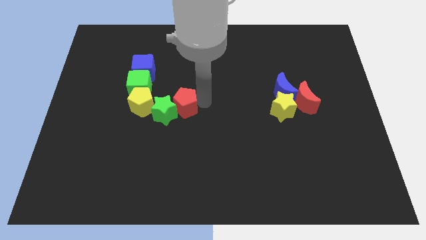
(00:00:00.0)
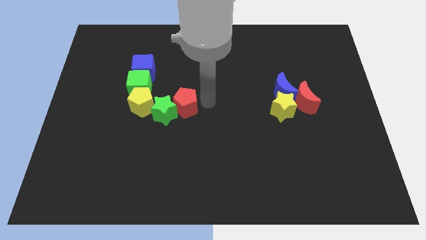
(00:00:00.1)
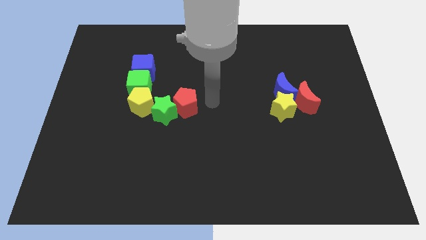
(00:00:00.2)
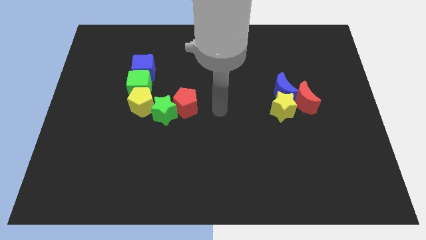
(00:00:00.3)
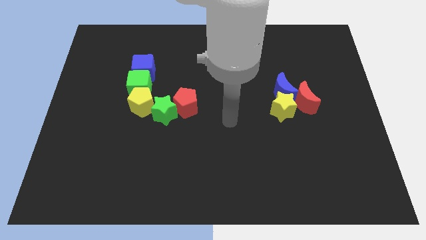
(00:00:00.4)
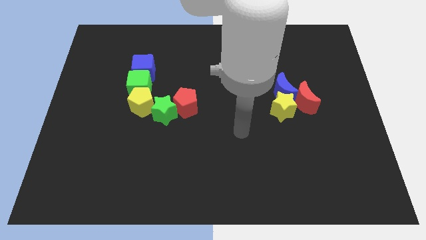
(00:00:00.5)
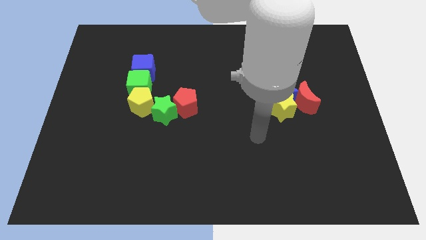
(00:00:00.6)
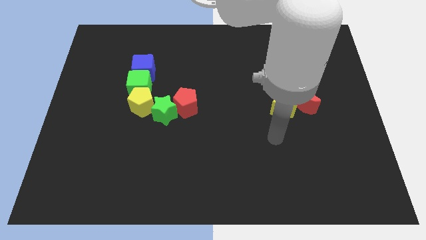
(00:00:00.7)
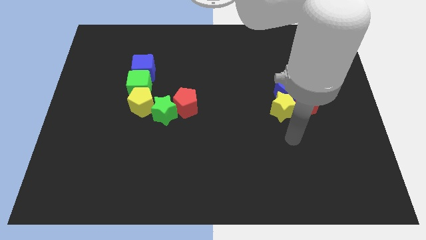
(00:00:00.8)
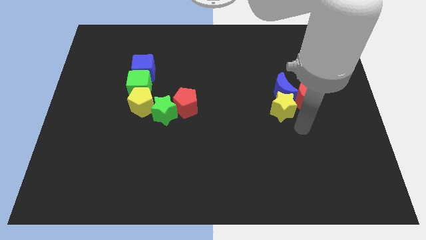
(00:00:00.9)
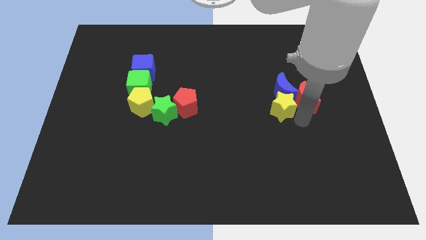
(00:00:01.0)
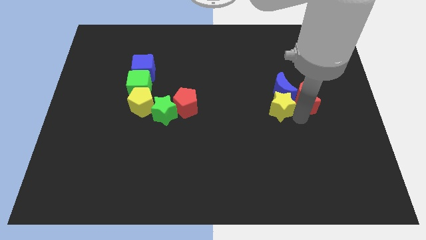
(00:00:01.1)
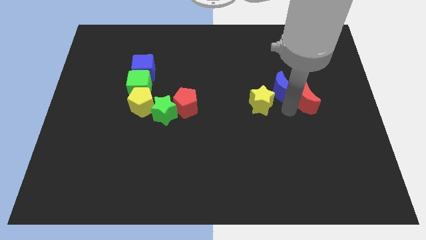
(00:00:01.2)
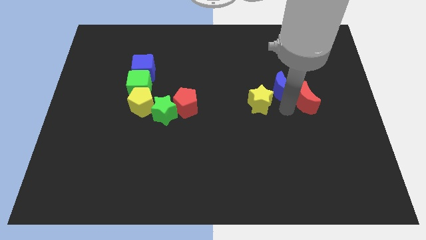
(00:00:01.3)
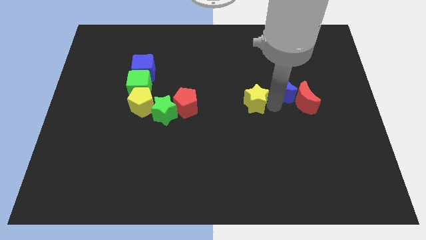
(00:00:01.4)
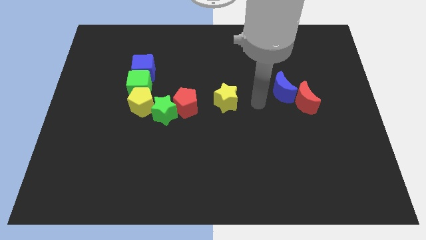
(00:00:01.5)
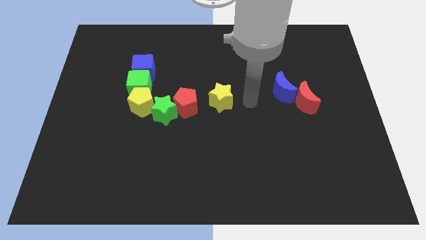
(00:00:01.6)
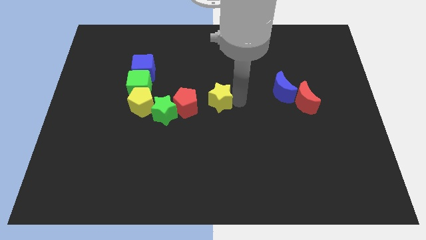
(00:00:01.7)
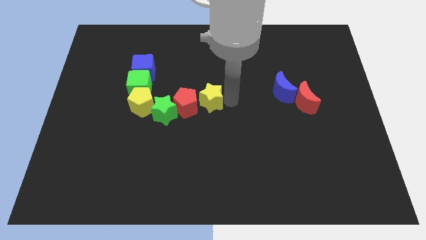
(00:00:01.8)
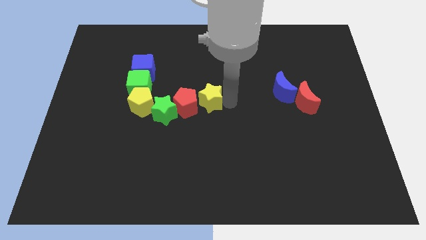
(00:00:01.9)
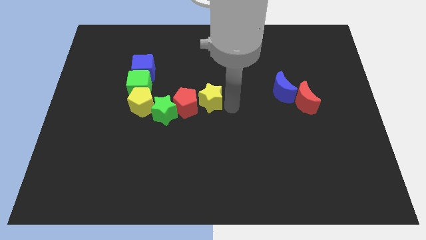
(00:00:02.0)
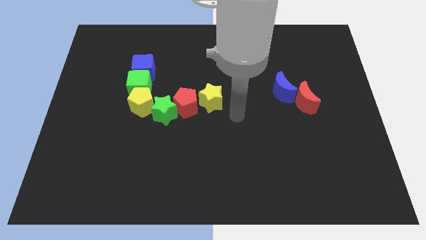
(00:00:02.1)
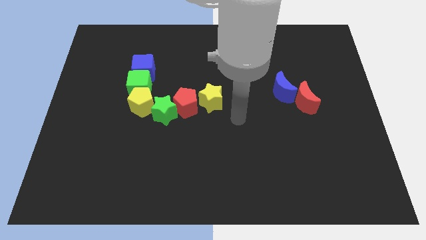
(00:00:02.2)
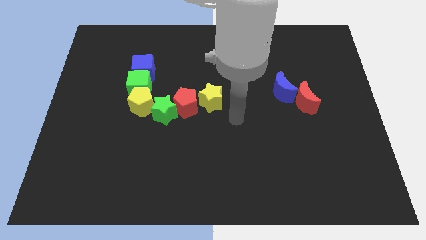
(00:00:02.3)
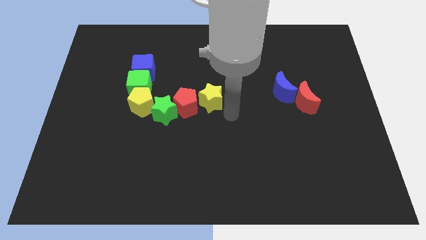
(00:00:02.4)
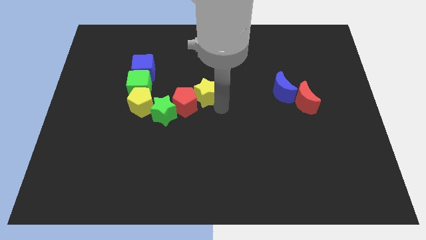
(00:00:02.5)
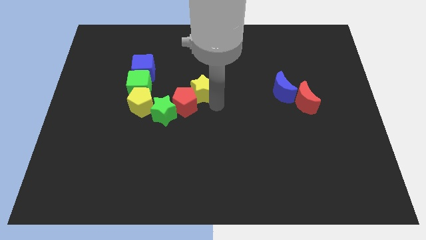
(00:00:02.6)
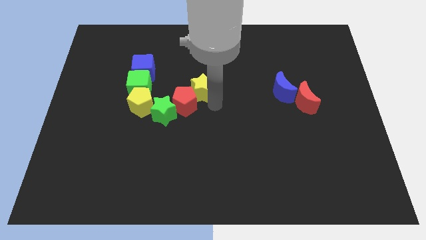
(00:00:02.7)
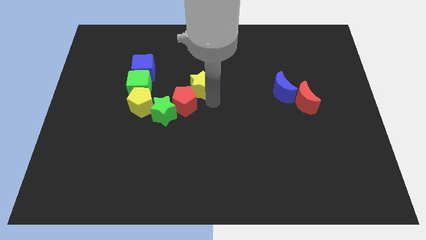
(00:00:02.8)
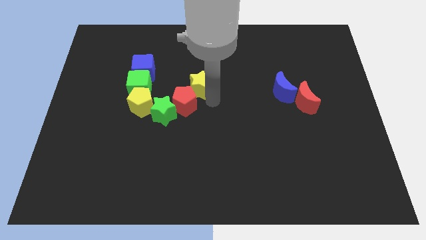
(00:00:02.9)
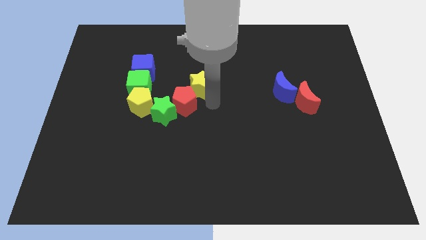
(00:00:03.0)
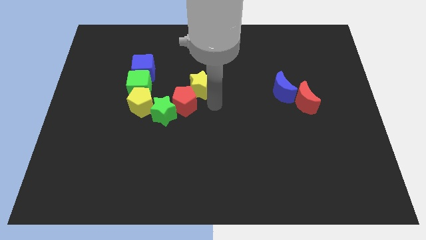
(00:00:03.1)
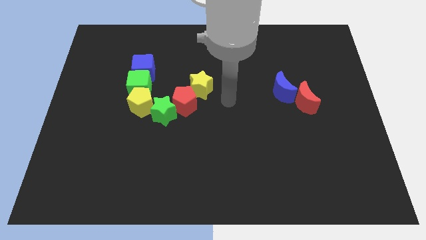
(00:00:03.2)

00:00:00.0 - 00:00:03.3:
place the yellow pentagon at the top right side of the red pentagon

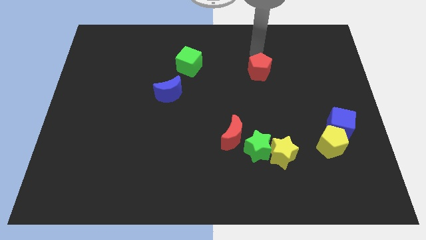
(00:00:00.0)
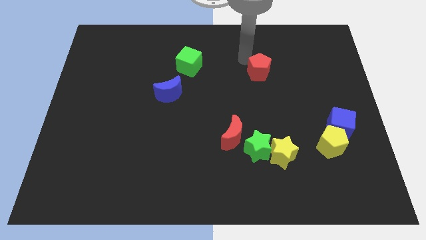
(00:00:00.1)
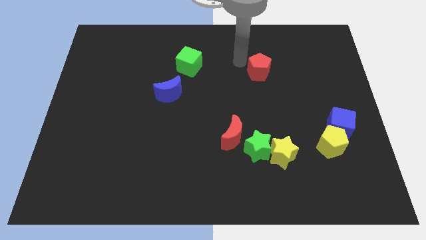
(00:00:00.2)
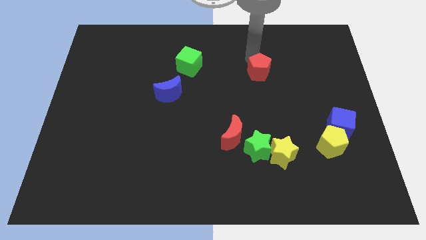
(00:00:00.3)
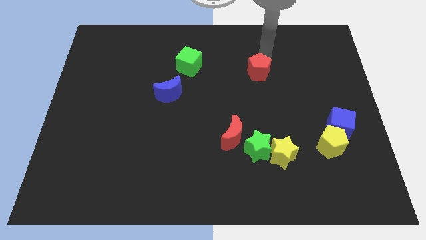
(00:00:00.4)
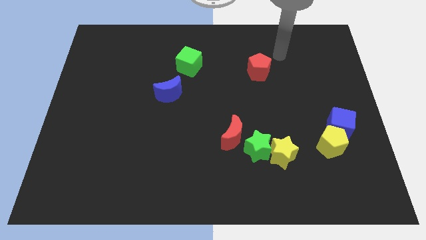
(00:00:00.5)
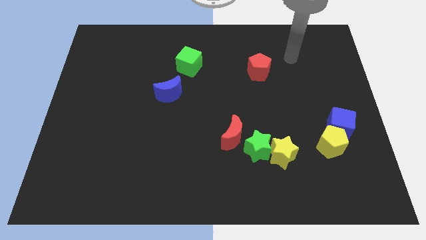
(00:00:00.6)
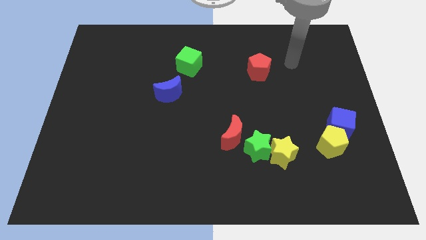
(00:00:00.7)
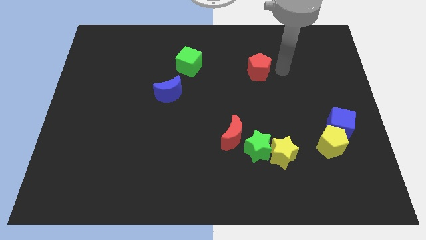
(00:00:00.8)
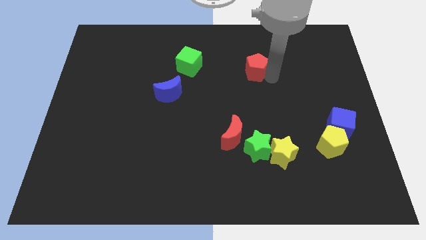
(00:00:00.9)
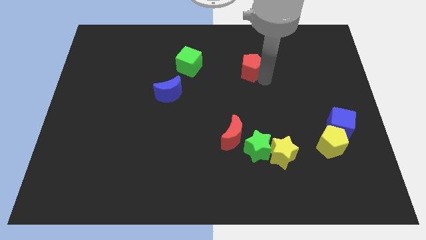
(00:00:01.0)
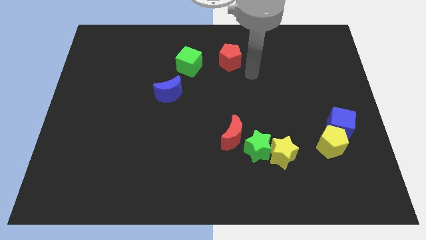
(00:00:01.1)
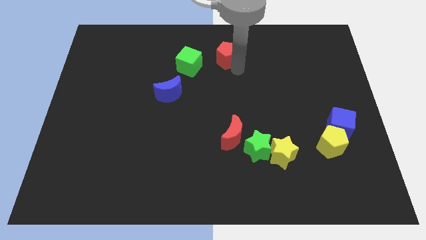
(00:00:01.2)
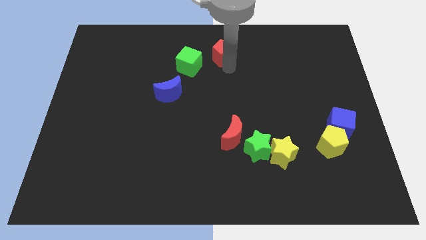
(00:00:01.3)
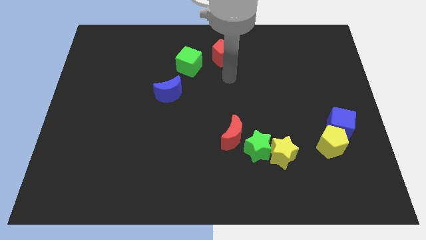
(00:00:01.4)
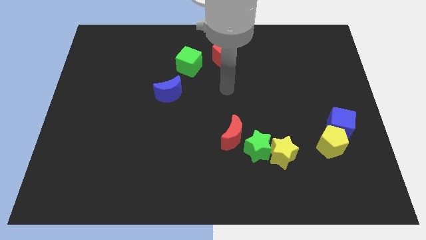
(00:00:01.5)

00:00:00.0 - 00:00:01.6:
push the red pentagon into the green cube

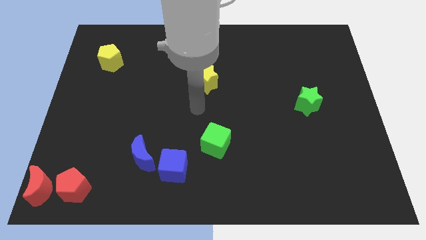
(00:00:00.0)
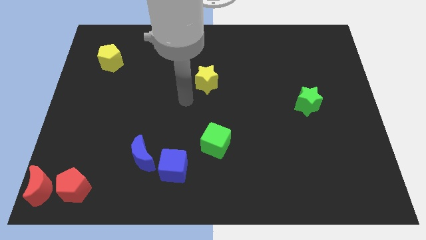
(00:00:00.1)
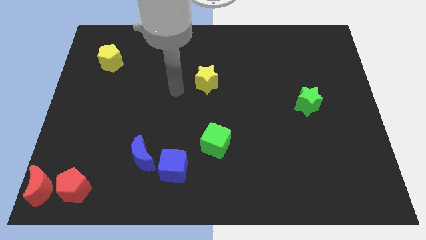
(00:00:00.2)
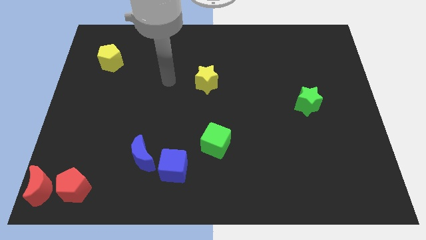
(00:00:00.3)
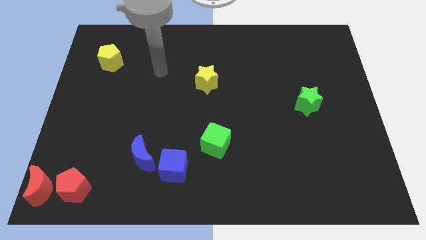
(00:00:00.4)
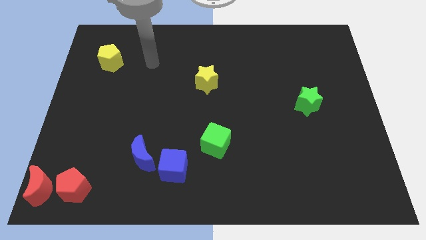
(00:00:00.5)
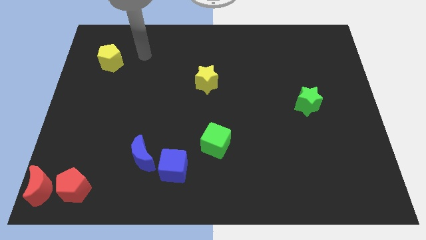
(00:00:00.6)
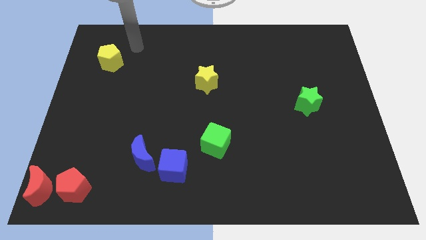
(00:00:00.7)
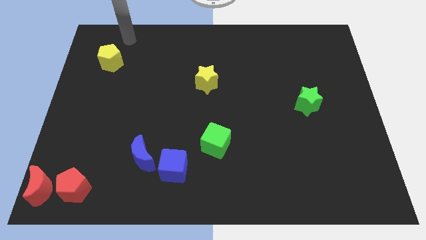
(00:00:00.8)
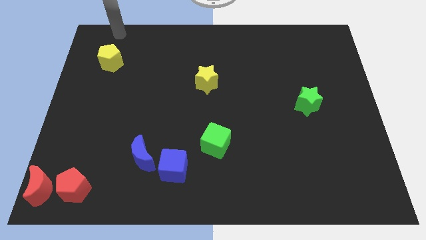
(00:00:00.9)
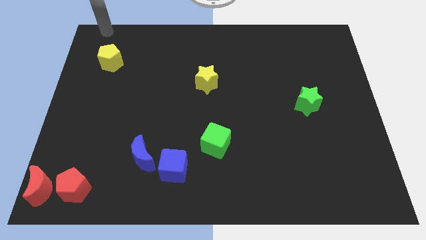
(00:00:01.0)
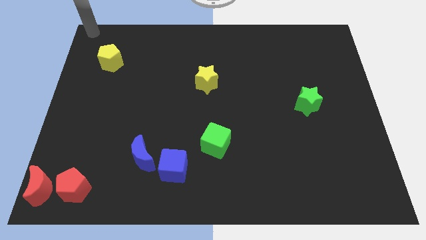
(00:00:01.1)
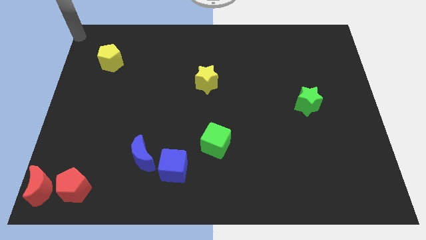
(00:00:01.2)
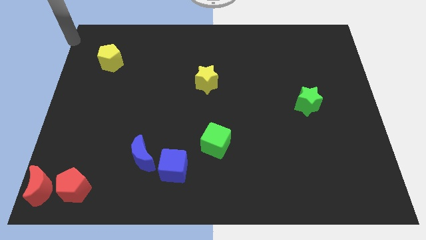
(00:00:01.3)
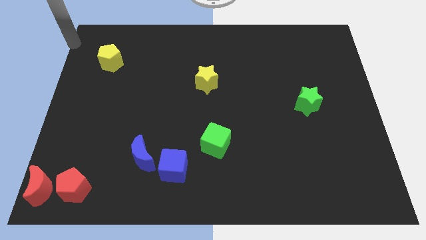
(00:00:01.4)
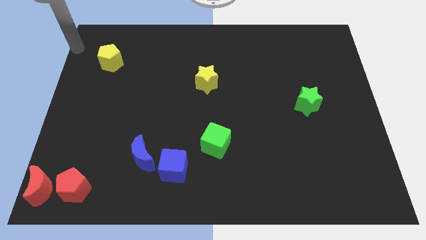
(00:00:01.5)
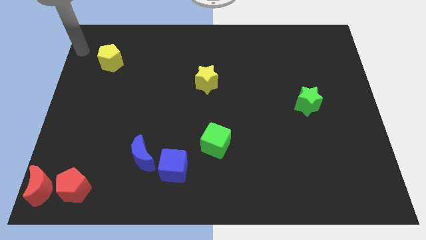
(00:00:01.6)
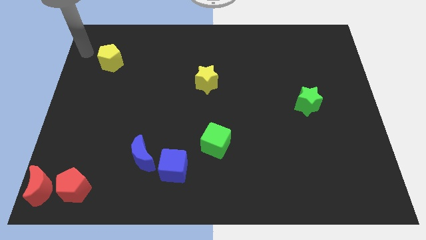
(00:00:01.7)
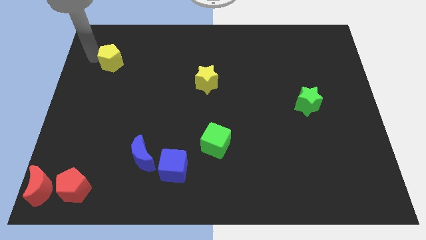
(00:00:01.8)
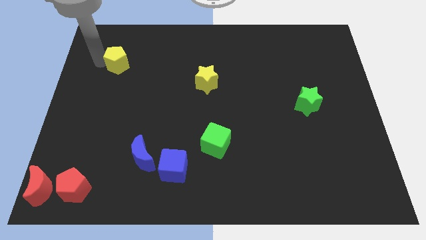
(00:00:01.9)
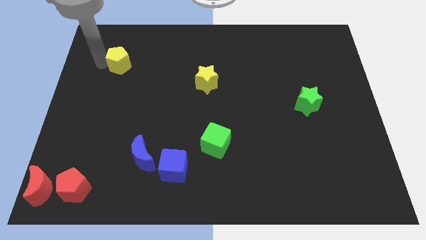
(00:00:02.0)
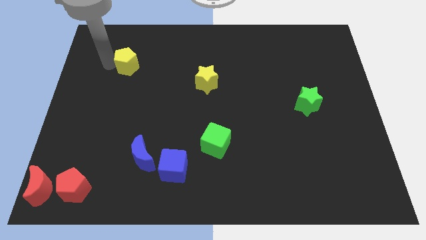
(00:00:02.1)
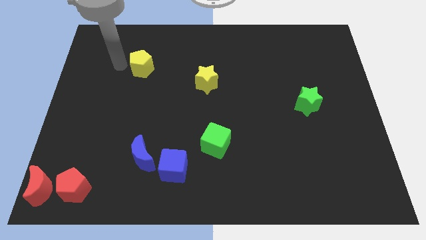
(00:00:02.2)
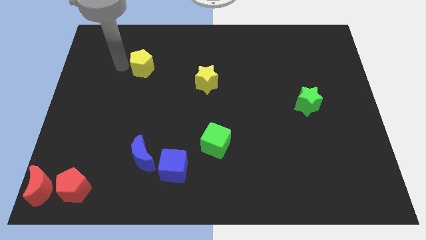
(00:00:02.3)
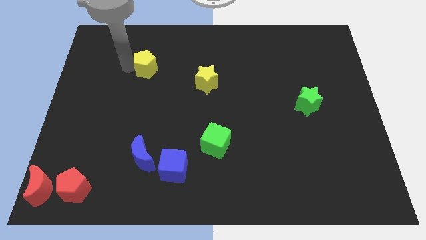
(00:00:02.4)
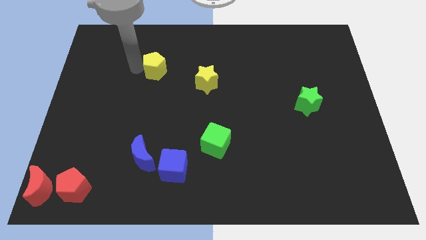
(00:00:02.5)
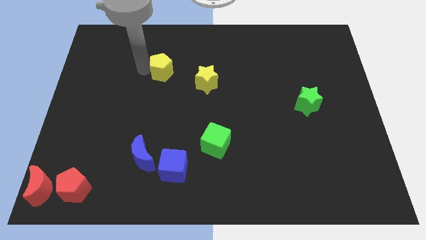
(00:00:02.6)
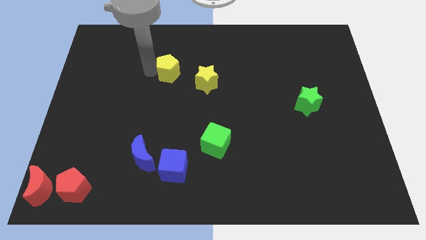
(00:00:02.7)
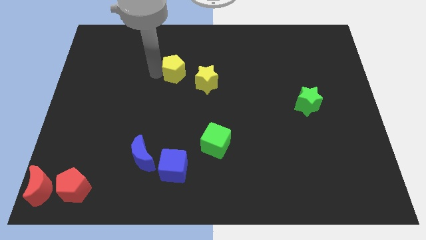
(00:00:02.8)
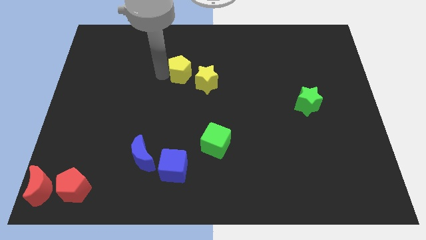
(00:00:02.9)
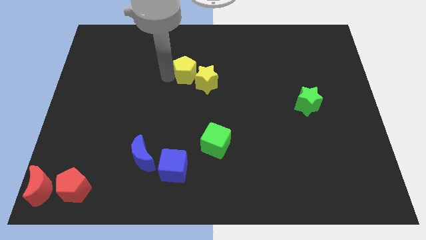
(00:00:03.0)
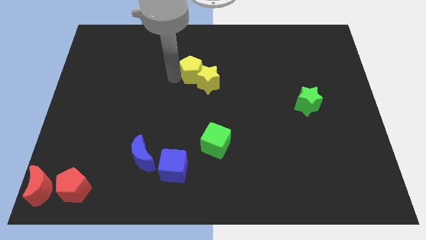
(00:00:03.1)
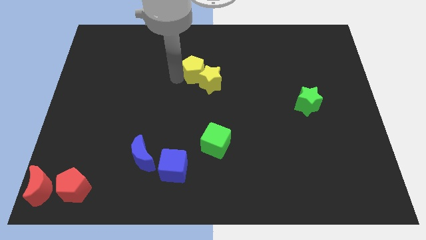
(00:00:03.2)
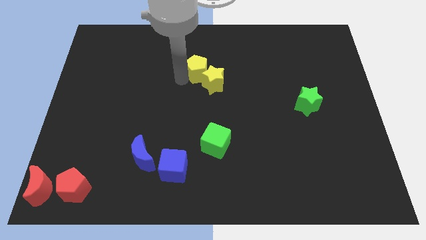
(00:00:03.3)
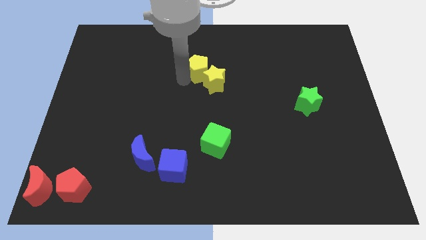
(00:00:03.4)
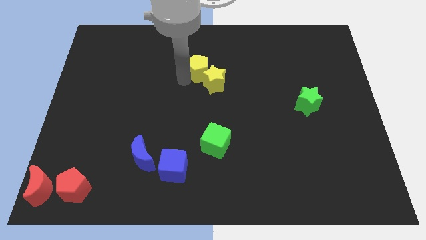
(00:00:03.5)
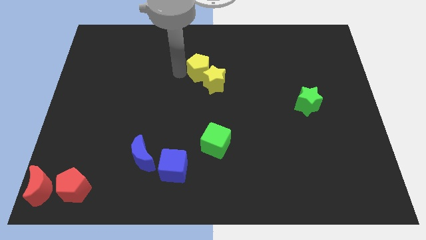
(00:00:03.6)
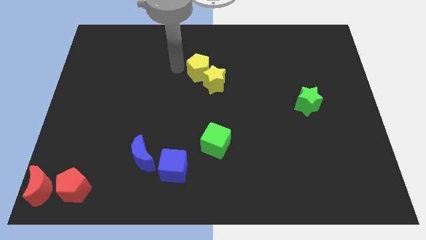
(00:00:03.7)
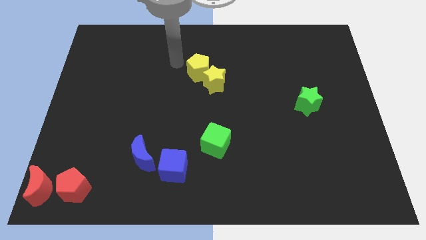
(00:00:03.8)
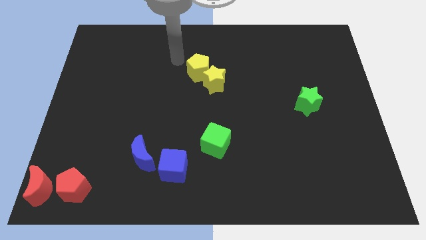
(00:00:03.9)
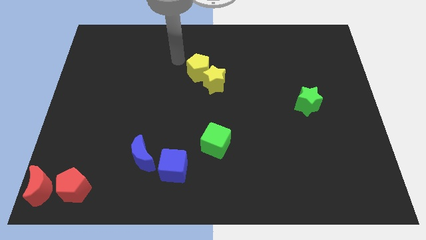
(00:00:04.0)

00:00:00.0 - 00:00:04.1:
push the yellow pentagon into yellow star
